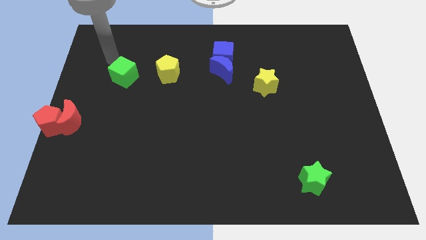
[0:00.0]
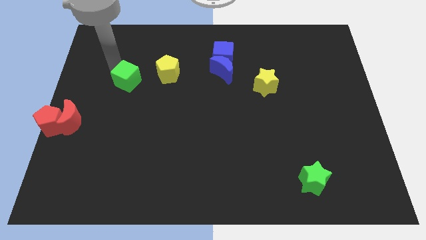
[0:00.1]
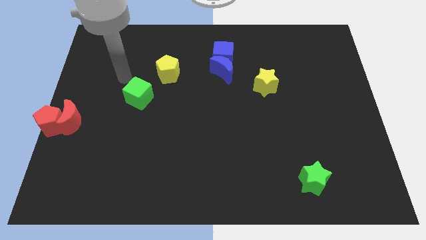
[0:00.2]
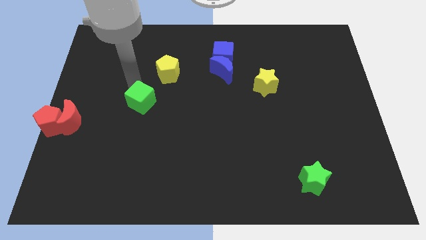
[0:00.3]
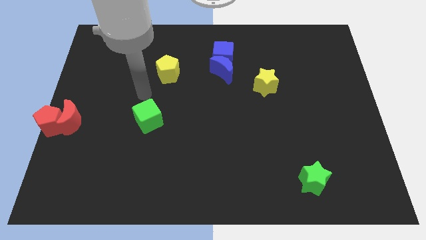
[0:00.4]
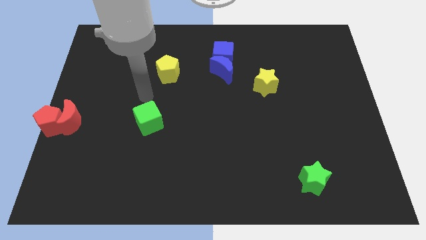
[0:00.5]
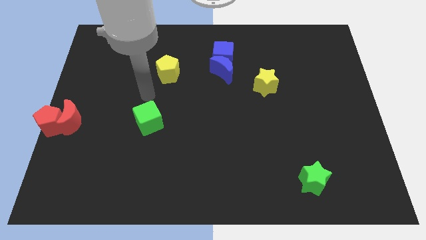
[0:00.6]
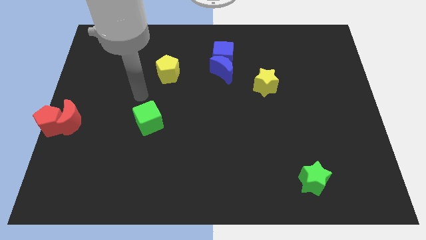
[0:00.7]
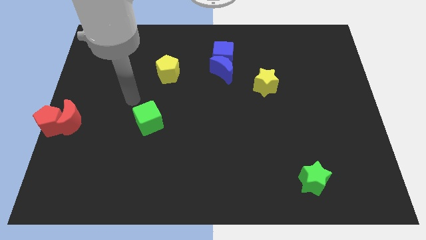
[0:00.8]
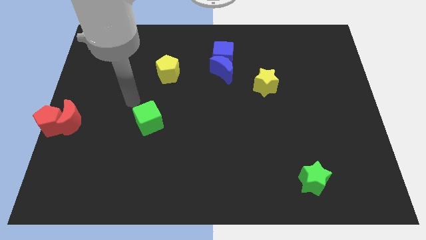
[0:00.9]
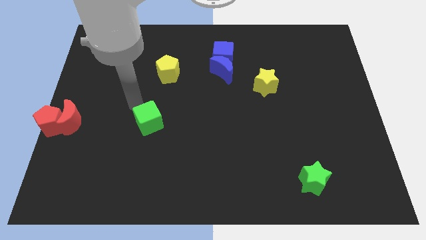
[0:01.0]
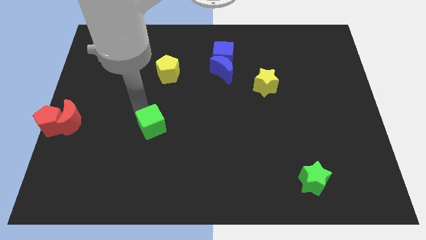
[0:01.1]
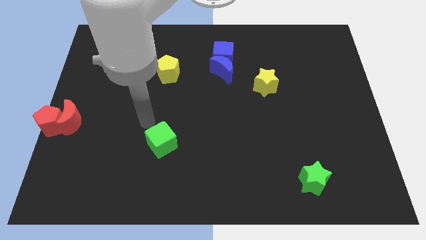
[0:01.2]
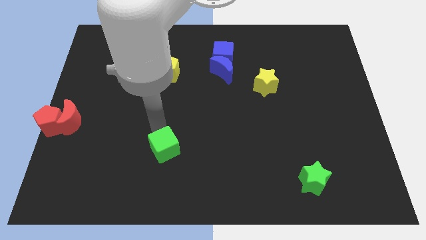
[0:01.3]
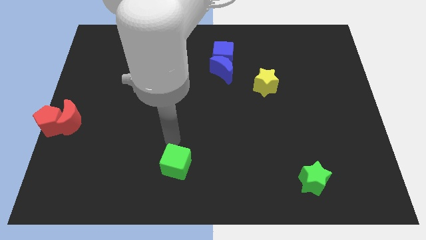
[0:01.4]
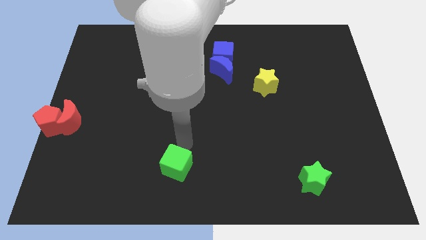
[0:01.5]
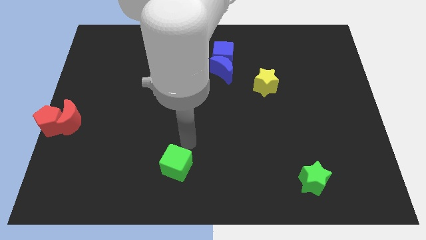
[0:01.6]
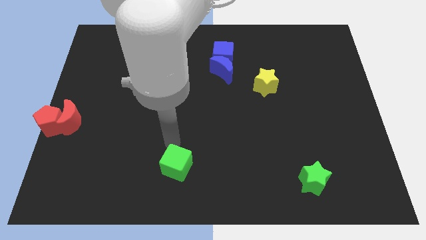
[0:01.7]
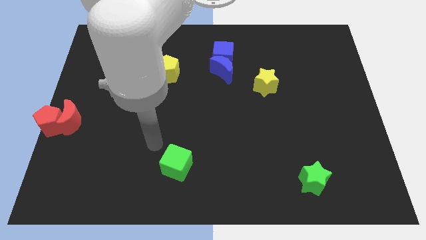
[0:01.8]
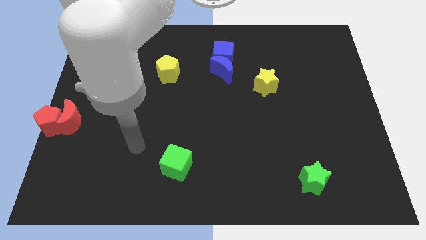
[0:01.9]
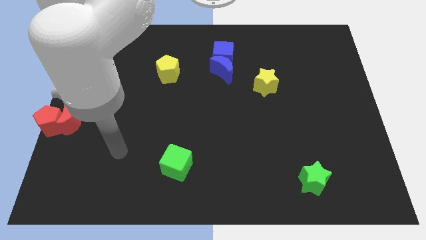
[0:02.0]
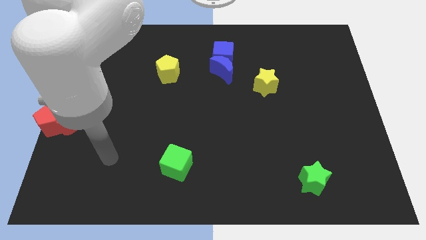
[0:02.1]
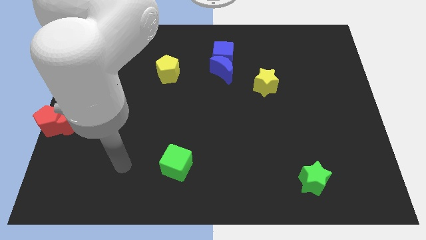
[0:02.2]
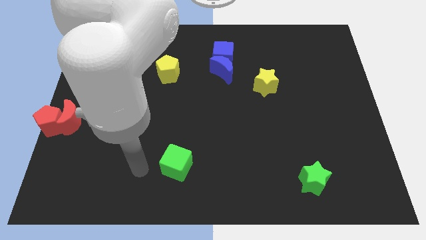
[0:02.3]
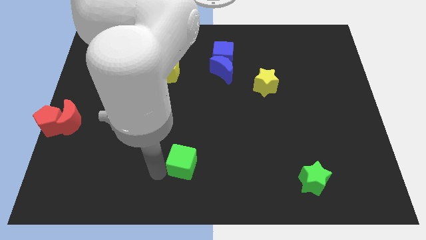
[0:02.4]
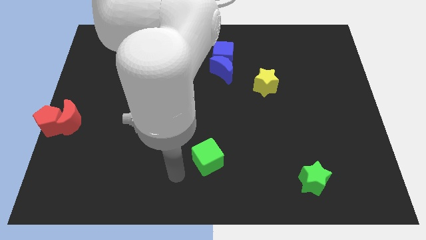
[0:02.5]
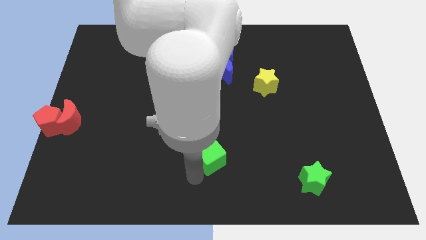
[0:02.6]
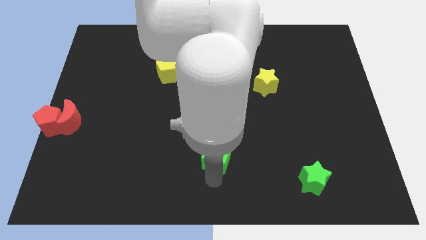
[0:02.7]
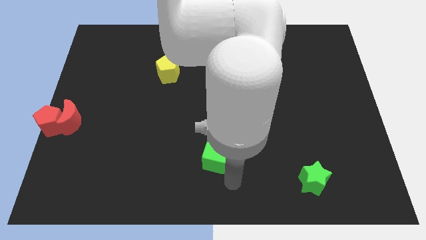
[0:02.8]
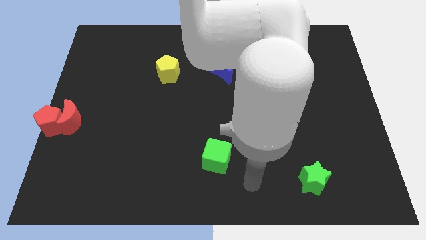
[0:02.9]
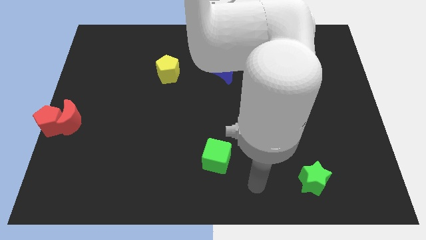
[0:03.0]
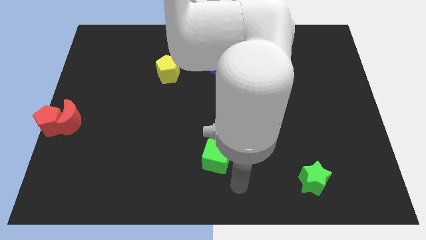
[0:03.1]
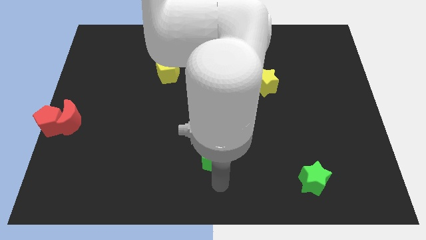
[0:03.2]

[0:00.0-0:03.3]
push the green cube towards the bottom centre

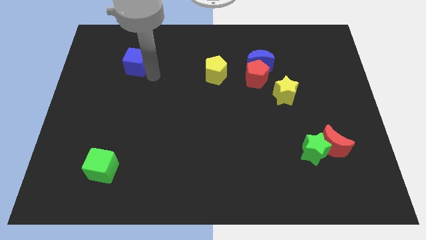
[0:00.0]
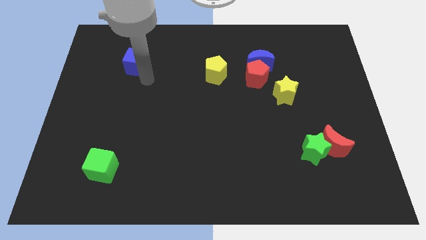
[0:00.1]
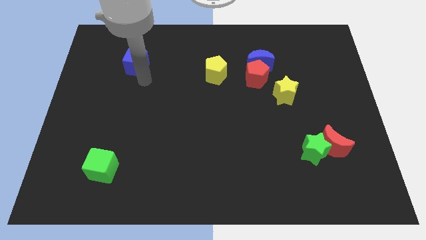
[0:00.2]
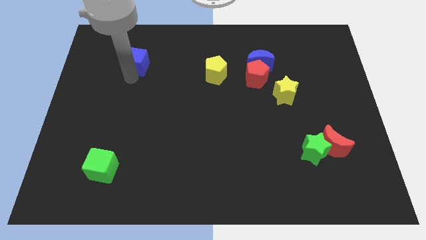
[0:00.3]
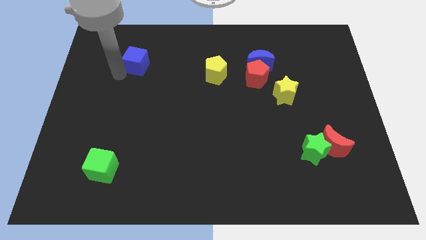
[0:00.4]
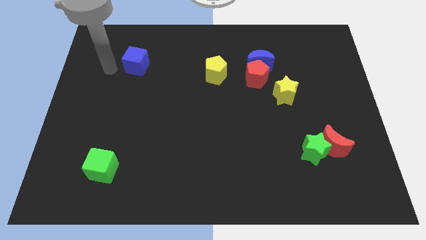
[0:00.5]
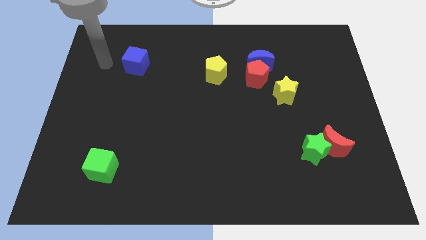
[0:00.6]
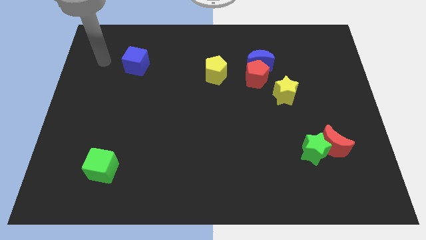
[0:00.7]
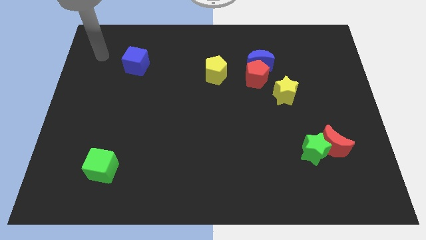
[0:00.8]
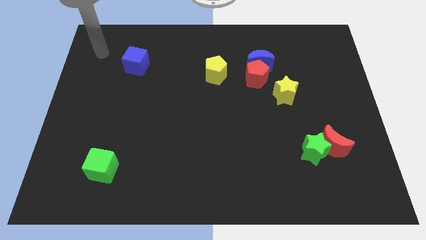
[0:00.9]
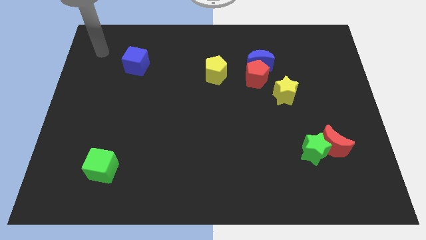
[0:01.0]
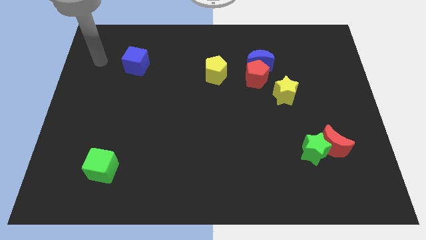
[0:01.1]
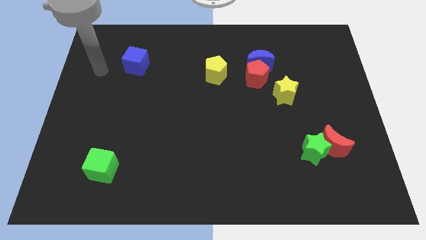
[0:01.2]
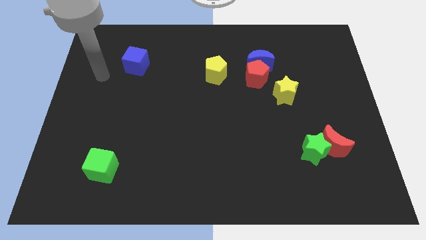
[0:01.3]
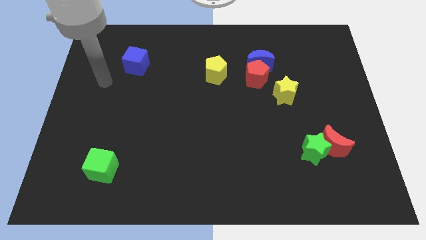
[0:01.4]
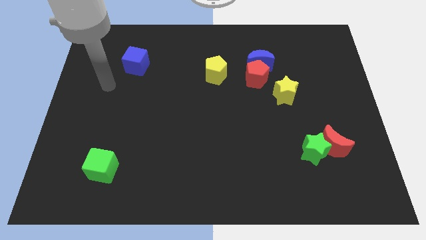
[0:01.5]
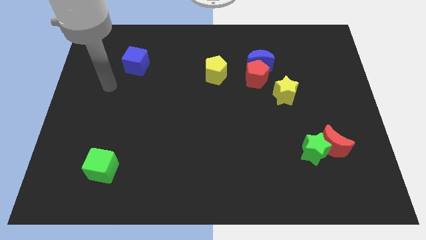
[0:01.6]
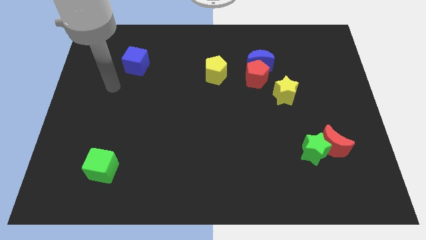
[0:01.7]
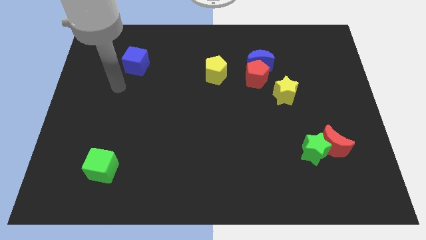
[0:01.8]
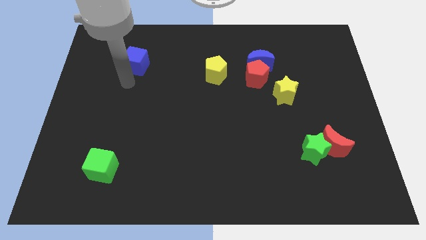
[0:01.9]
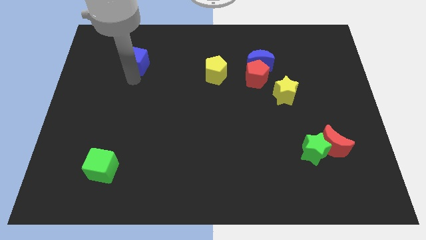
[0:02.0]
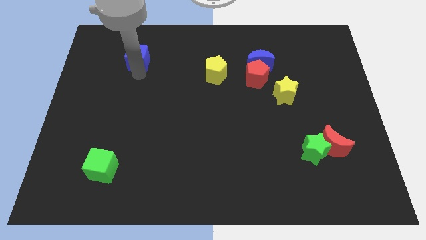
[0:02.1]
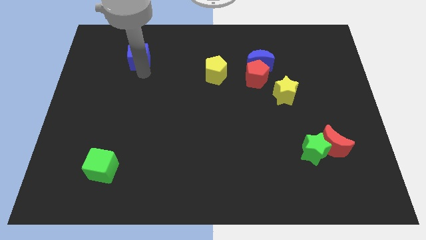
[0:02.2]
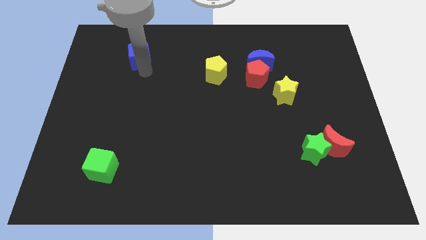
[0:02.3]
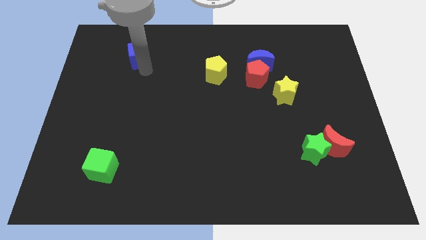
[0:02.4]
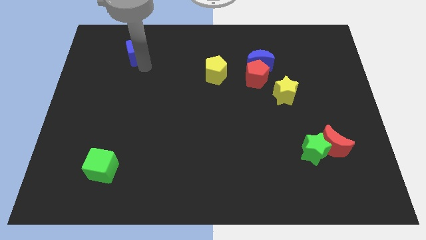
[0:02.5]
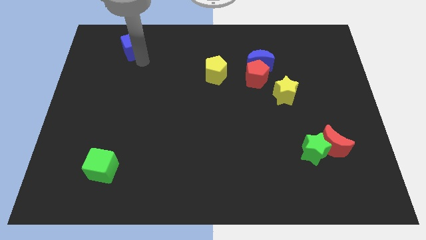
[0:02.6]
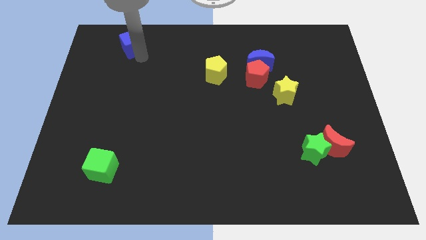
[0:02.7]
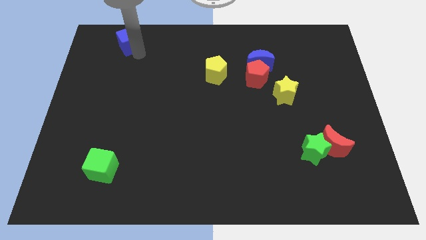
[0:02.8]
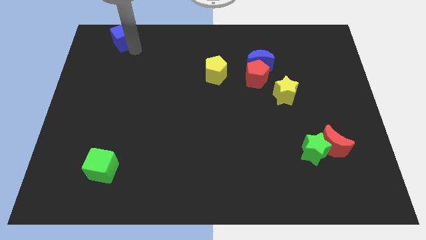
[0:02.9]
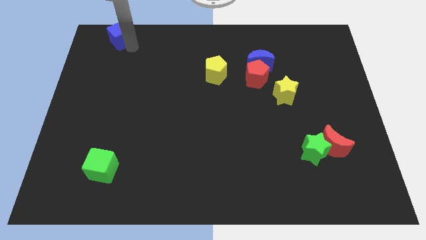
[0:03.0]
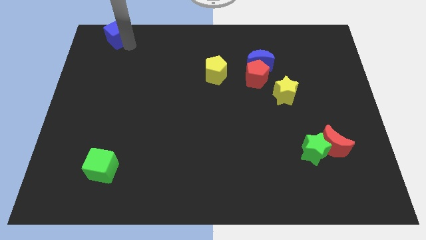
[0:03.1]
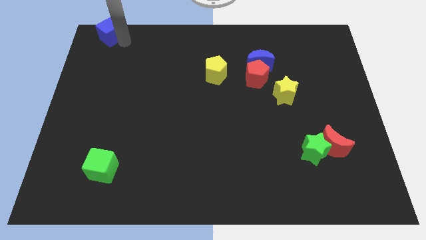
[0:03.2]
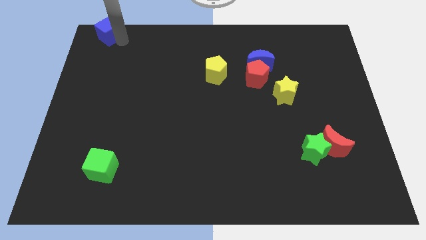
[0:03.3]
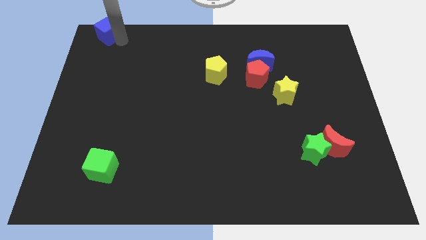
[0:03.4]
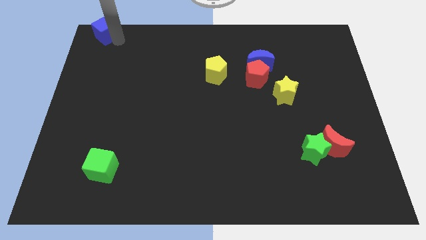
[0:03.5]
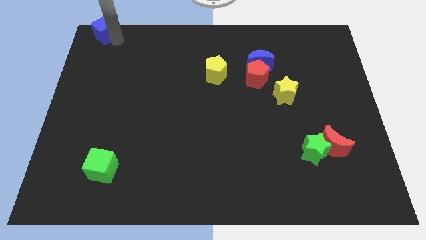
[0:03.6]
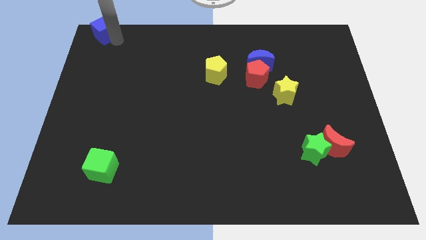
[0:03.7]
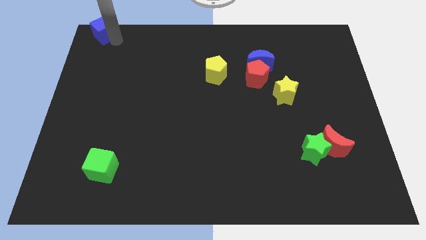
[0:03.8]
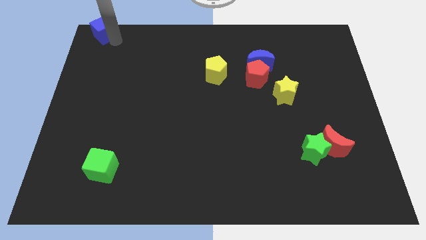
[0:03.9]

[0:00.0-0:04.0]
push the blue cube to the top left corner of the board

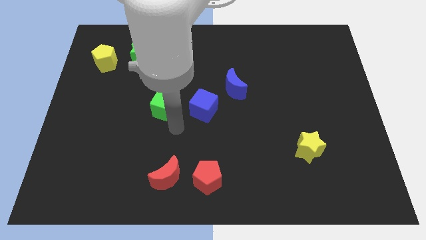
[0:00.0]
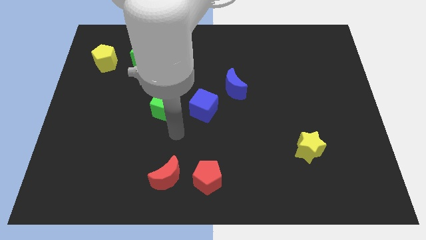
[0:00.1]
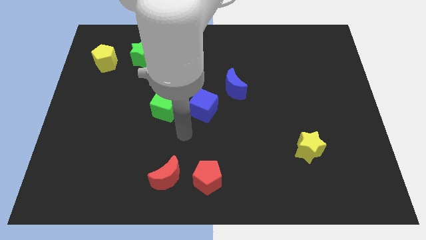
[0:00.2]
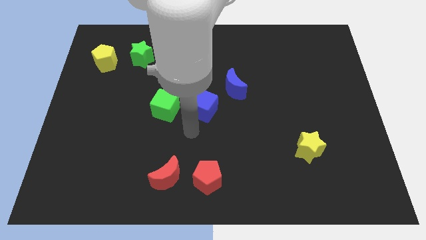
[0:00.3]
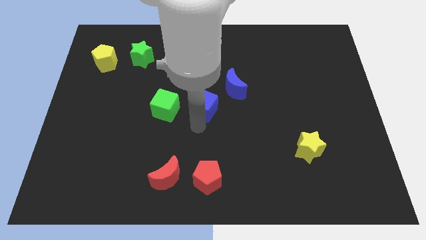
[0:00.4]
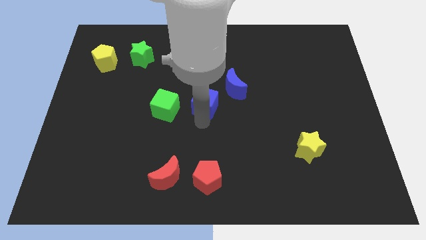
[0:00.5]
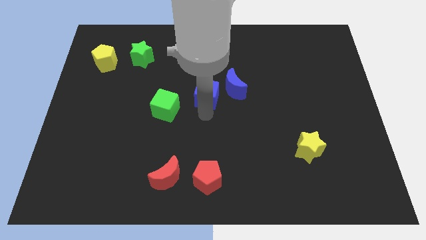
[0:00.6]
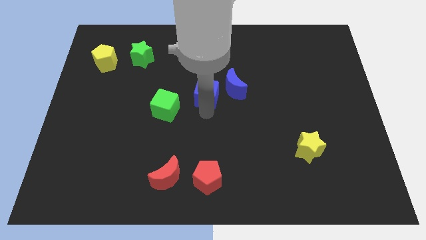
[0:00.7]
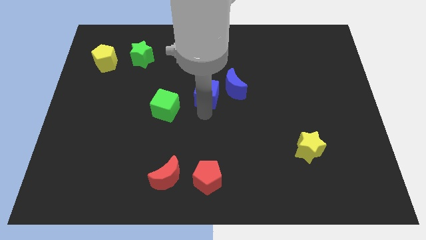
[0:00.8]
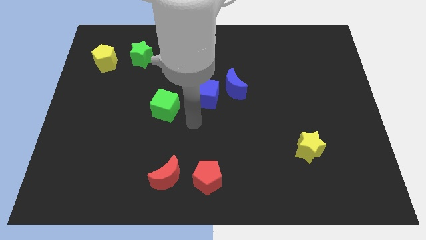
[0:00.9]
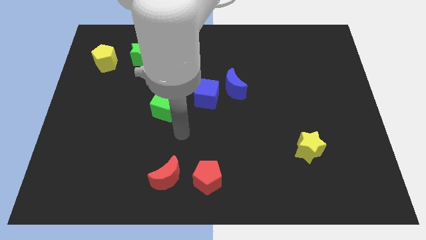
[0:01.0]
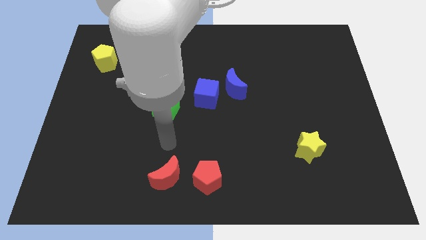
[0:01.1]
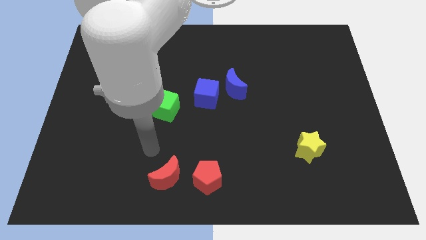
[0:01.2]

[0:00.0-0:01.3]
move the blue cube slightly up

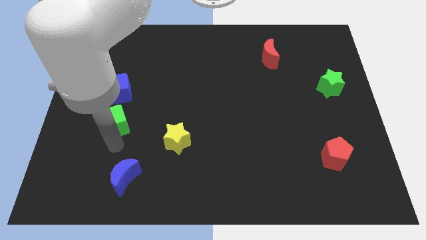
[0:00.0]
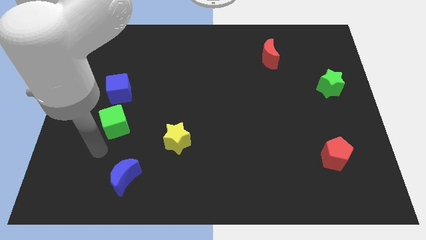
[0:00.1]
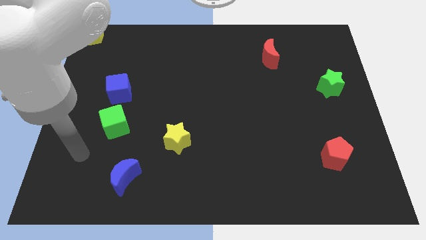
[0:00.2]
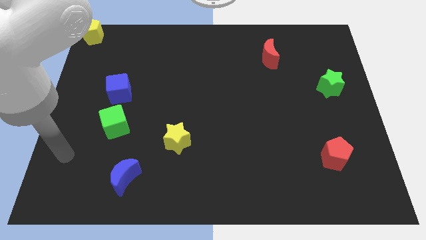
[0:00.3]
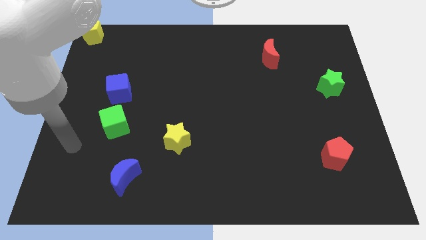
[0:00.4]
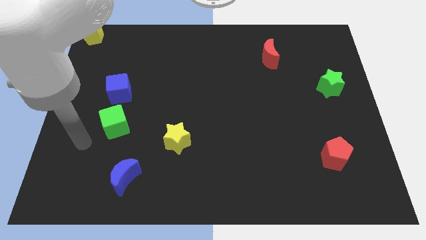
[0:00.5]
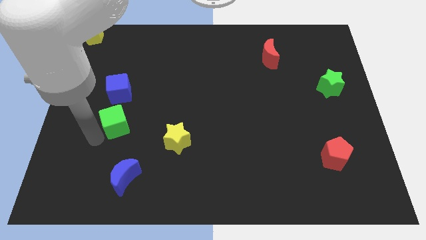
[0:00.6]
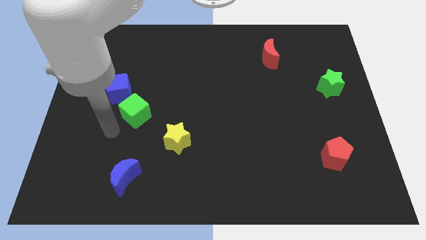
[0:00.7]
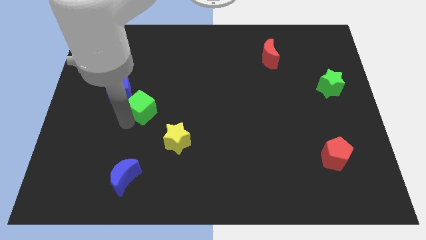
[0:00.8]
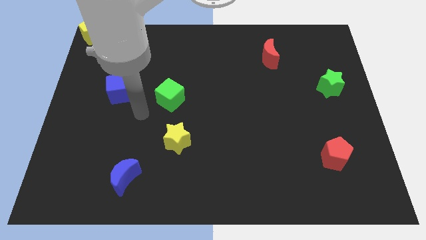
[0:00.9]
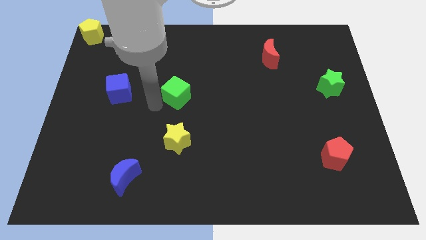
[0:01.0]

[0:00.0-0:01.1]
push green cube above yellow star
